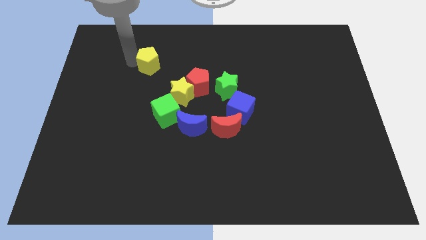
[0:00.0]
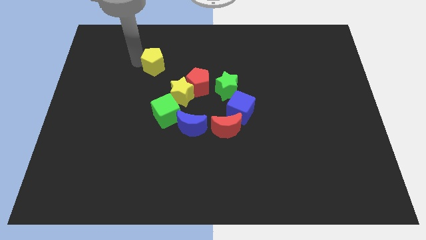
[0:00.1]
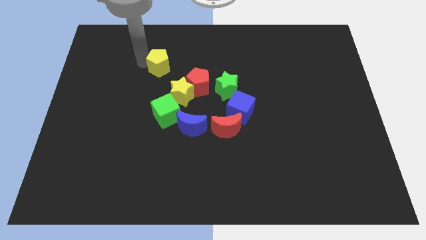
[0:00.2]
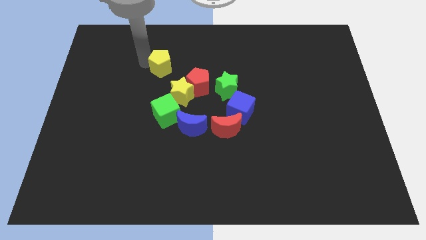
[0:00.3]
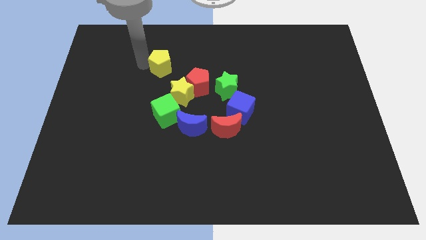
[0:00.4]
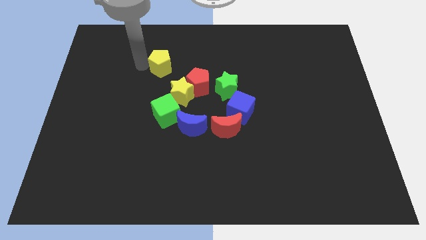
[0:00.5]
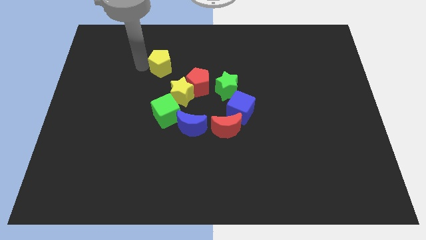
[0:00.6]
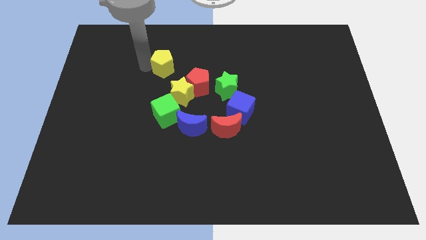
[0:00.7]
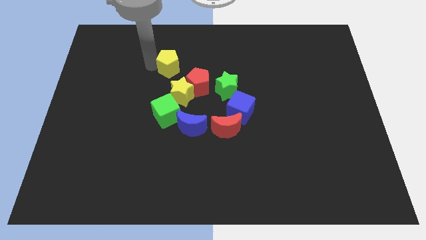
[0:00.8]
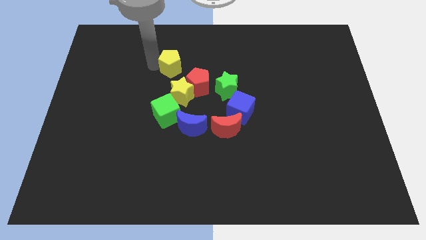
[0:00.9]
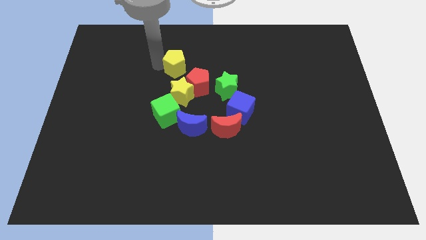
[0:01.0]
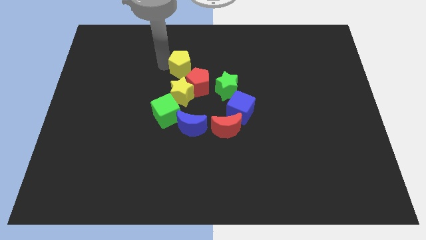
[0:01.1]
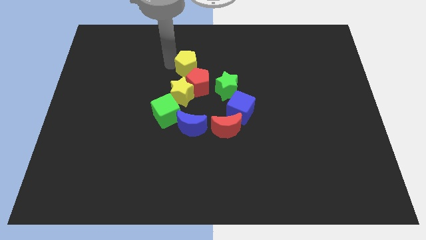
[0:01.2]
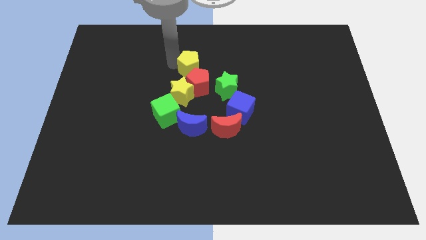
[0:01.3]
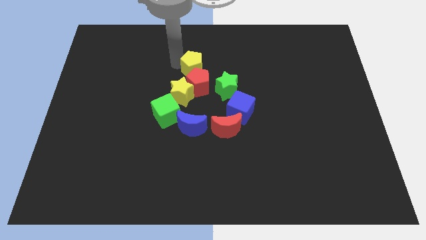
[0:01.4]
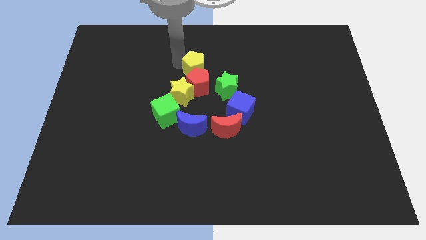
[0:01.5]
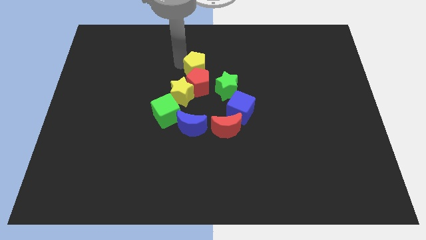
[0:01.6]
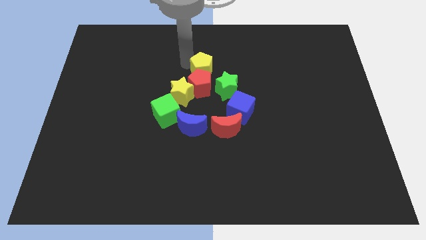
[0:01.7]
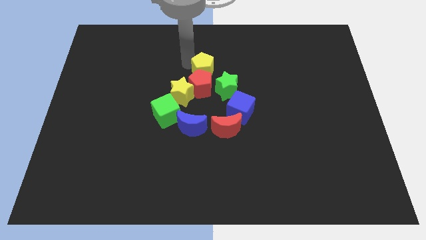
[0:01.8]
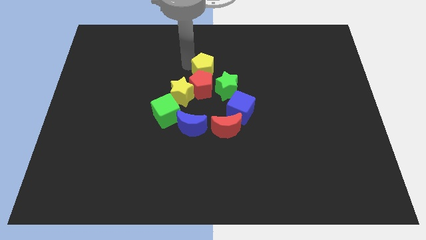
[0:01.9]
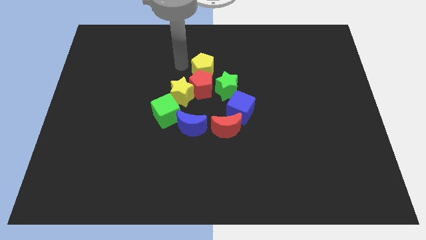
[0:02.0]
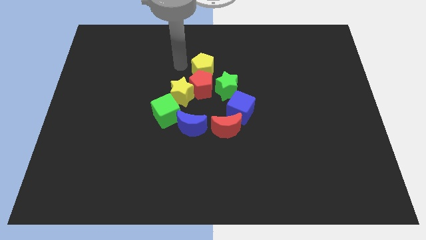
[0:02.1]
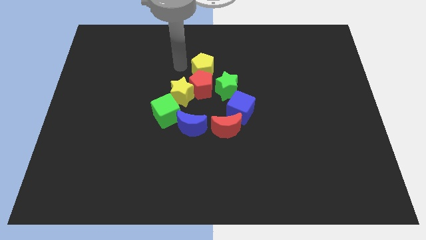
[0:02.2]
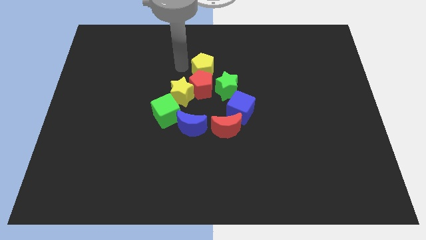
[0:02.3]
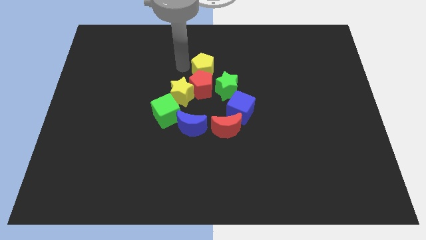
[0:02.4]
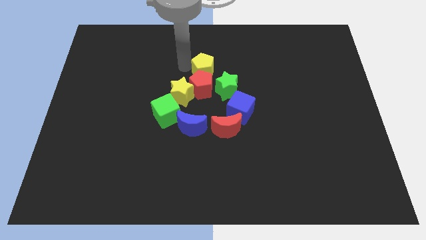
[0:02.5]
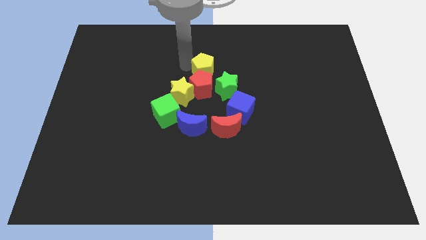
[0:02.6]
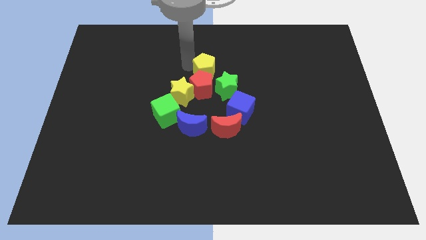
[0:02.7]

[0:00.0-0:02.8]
place the yellow pentagon at the top of red pentagon

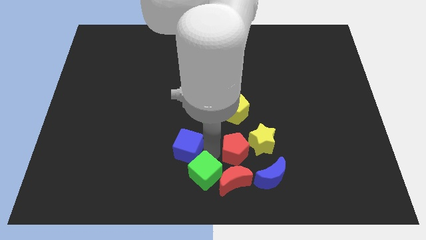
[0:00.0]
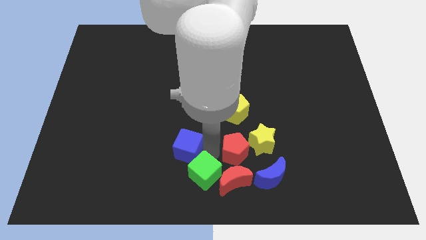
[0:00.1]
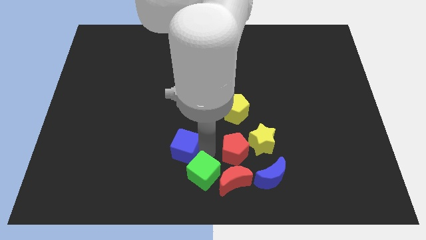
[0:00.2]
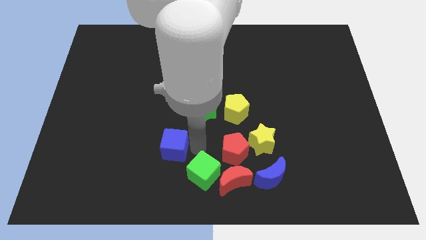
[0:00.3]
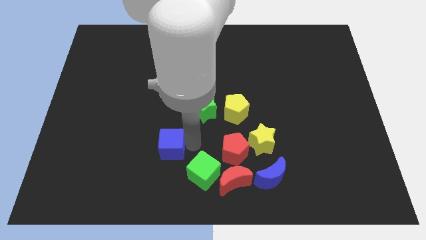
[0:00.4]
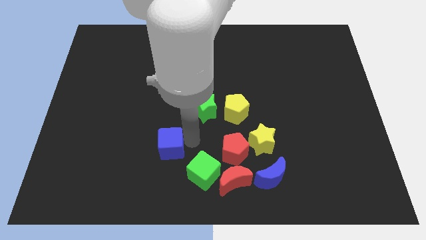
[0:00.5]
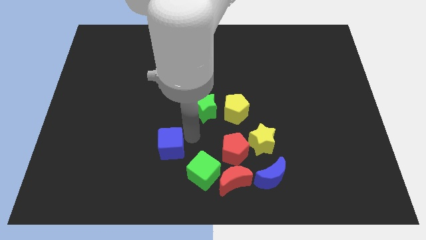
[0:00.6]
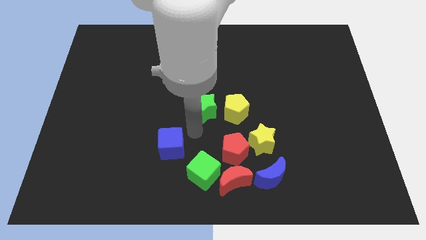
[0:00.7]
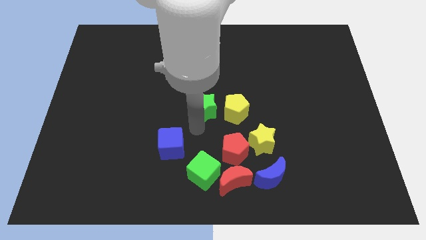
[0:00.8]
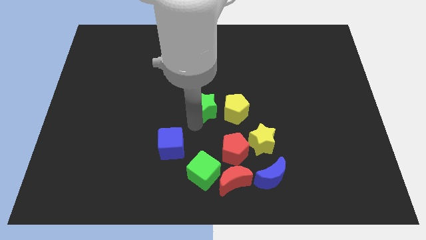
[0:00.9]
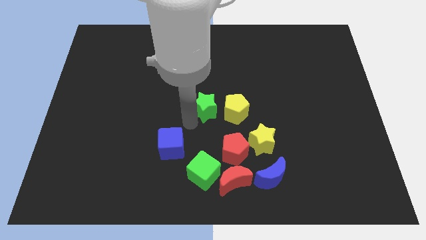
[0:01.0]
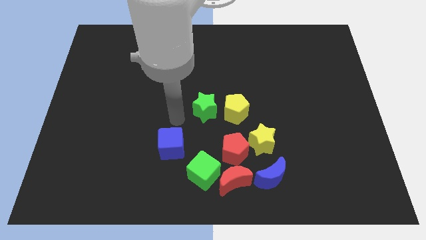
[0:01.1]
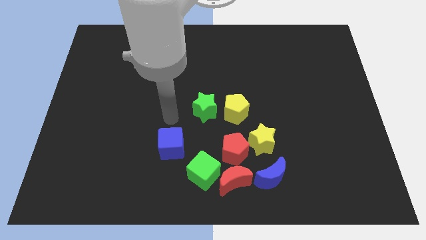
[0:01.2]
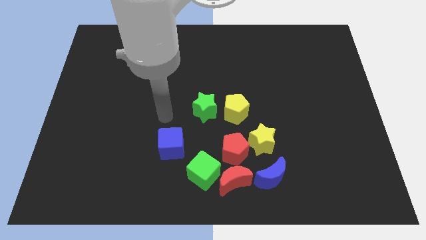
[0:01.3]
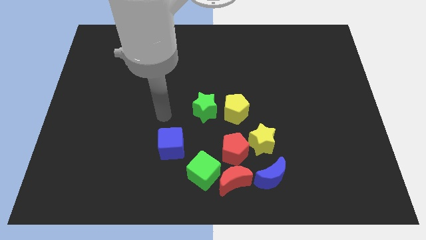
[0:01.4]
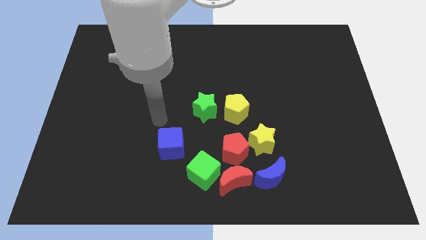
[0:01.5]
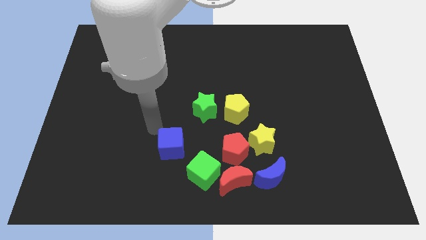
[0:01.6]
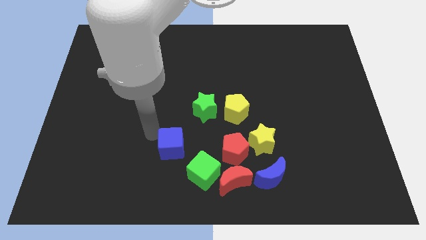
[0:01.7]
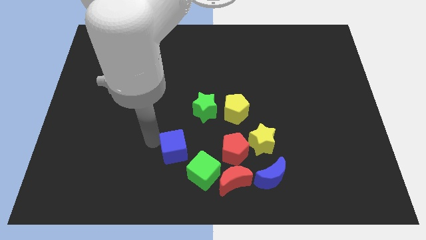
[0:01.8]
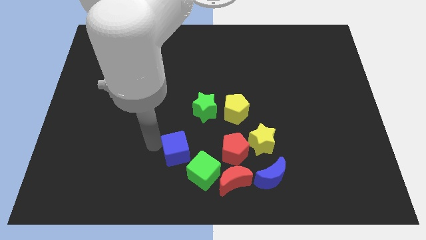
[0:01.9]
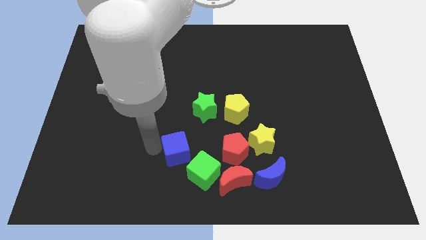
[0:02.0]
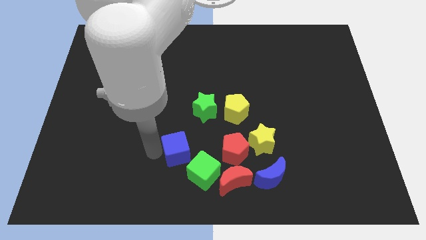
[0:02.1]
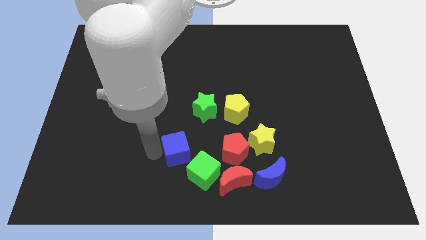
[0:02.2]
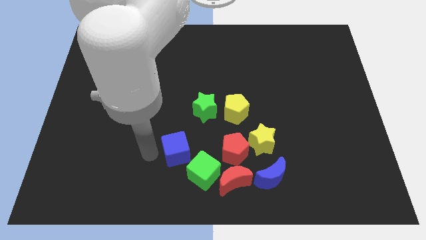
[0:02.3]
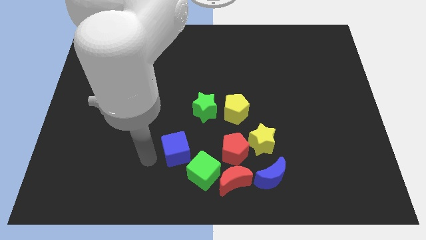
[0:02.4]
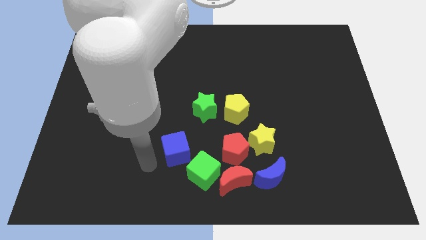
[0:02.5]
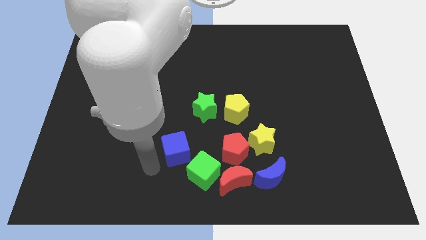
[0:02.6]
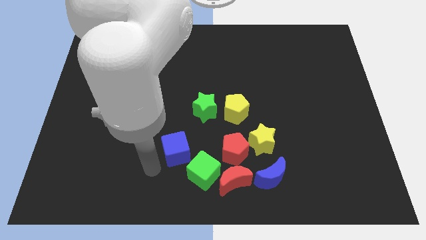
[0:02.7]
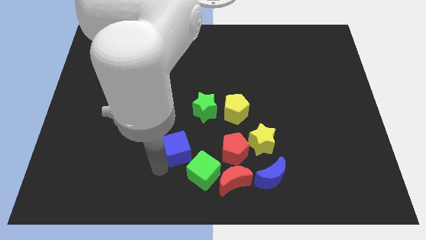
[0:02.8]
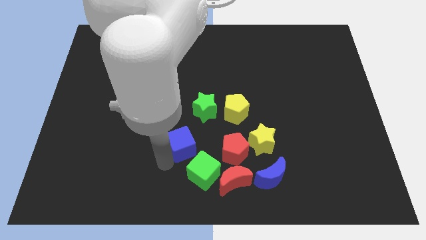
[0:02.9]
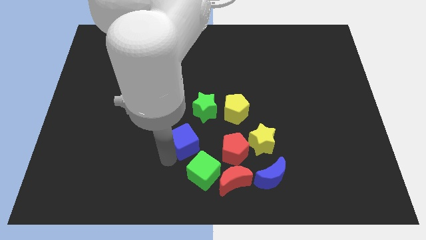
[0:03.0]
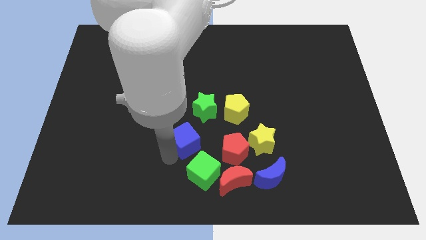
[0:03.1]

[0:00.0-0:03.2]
adjust the blue cube above the green cube

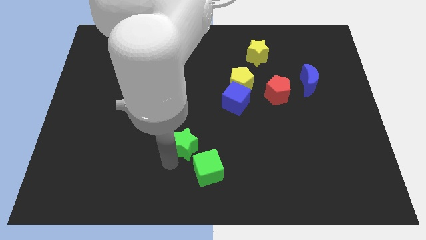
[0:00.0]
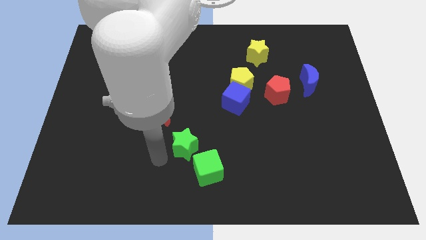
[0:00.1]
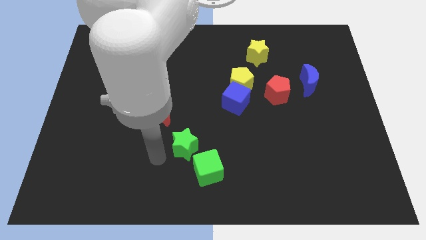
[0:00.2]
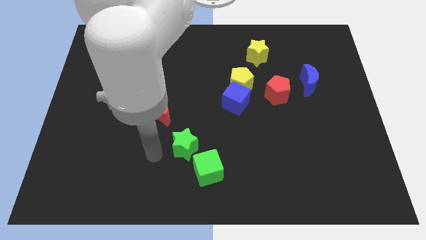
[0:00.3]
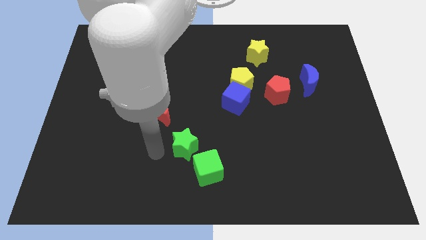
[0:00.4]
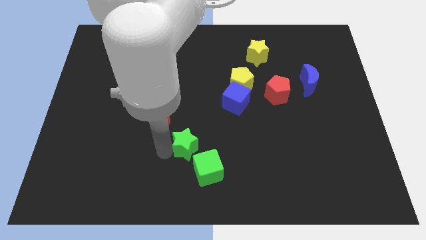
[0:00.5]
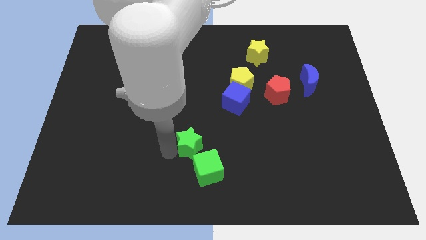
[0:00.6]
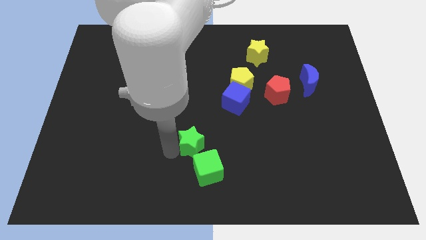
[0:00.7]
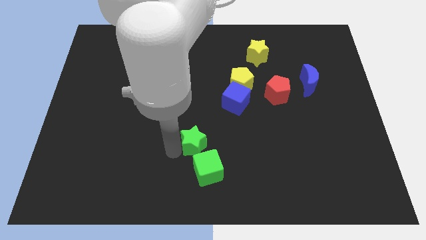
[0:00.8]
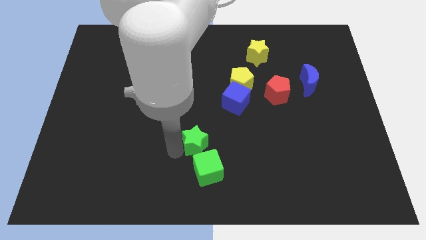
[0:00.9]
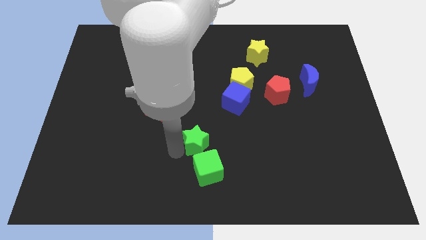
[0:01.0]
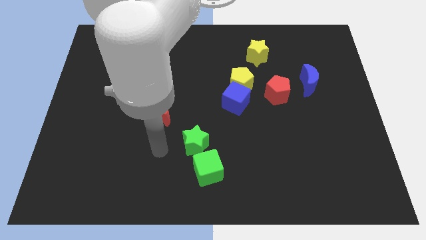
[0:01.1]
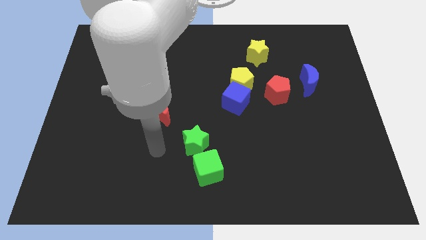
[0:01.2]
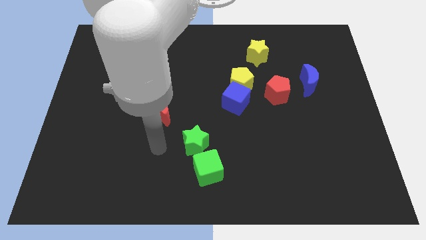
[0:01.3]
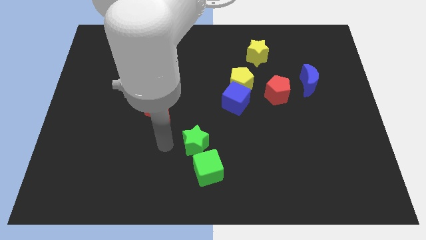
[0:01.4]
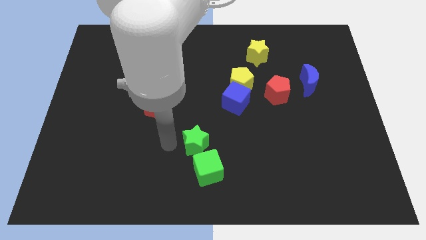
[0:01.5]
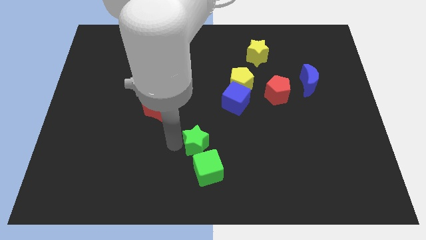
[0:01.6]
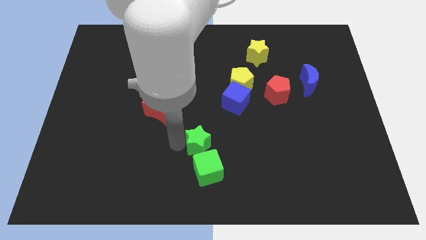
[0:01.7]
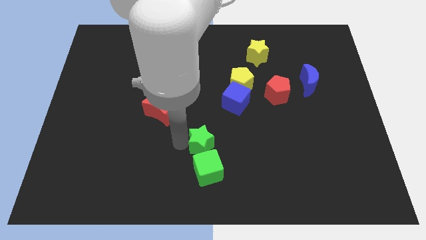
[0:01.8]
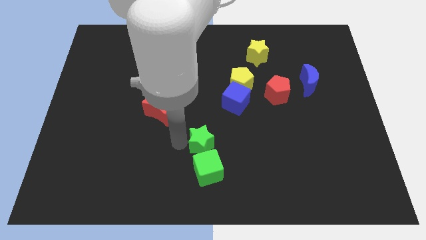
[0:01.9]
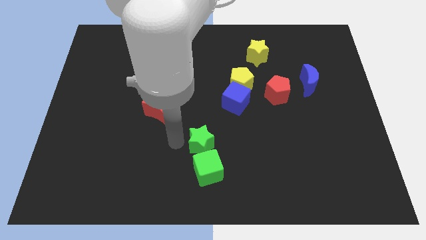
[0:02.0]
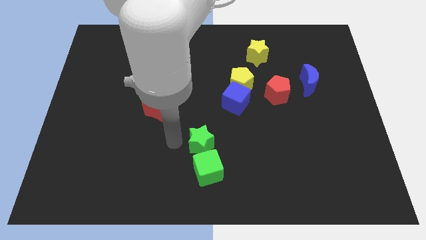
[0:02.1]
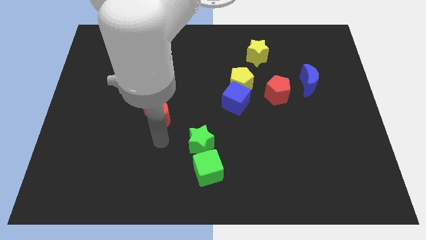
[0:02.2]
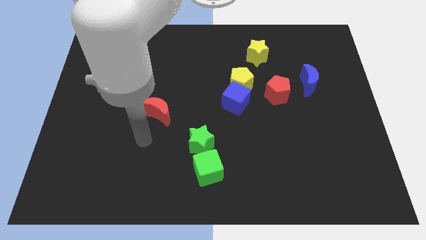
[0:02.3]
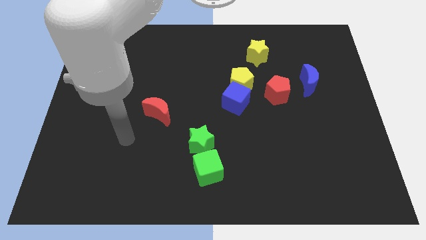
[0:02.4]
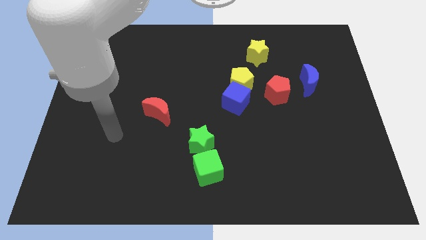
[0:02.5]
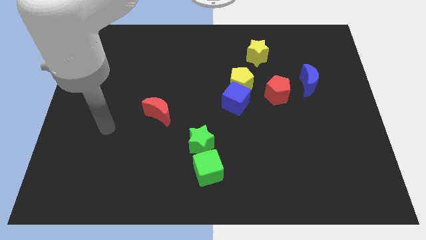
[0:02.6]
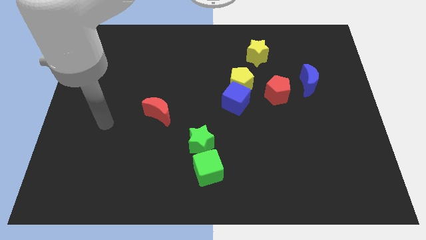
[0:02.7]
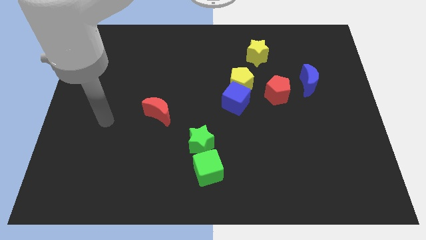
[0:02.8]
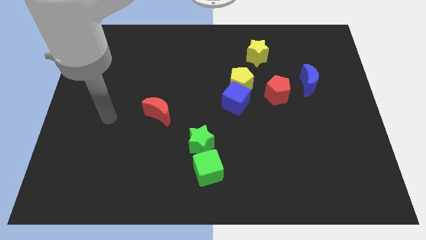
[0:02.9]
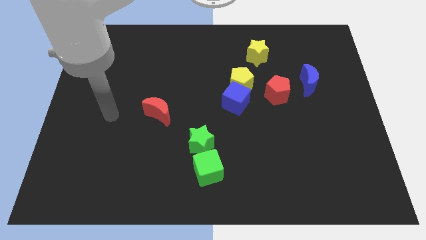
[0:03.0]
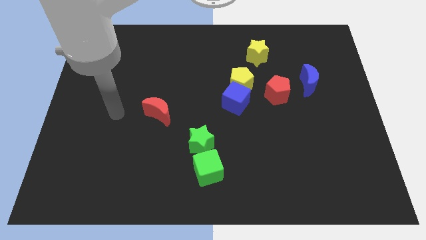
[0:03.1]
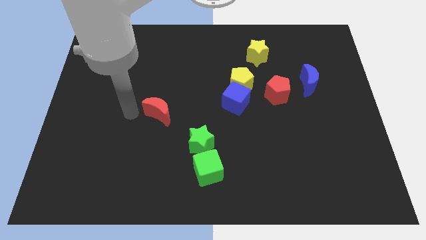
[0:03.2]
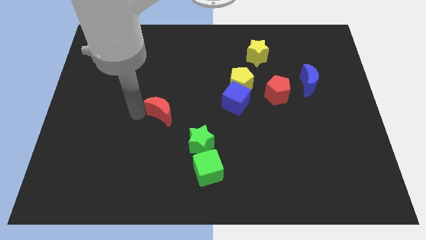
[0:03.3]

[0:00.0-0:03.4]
move the green star diagonally bottom right to the red moon
